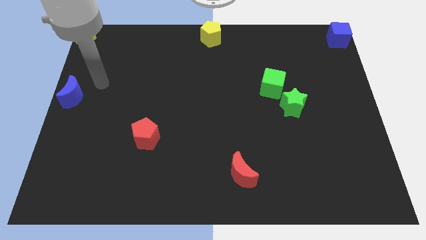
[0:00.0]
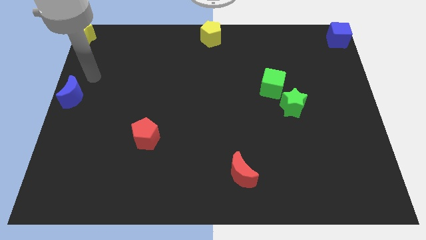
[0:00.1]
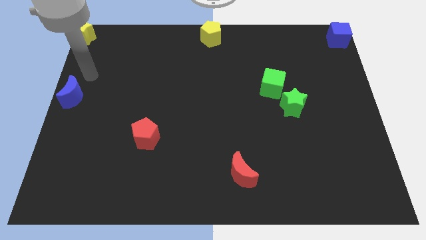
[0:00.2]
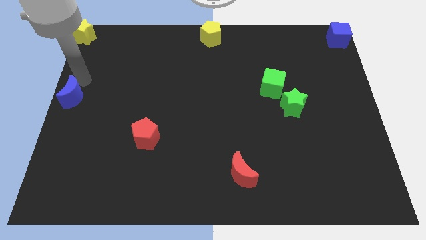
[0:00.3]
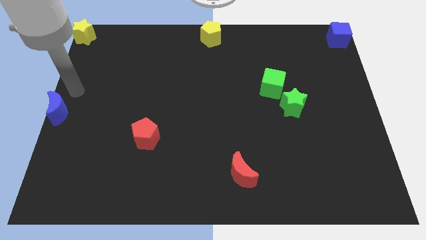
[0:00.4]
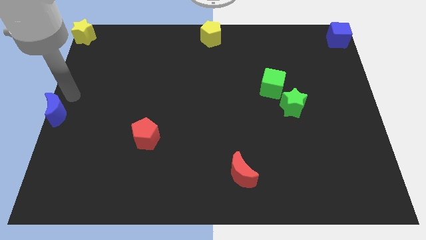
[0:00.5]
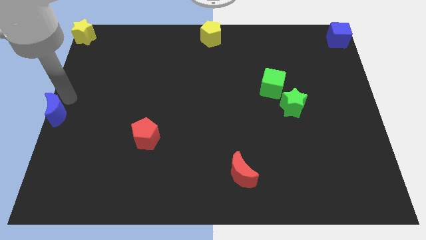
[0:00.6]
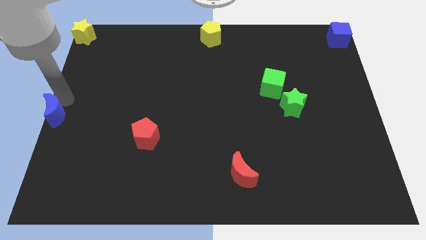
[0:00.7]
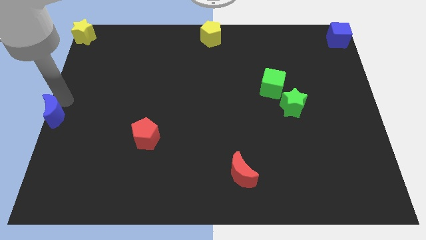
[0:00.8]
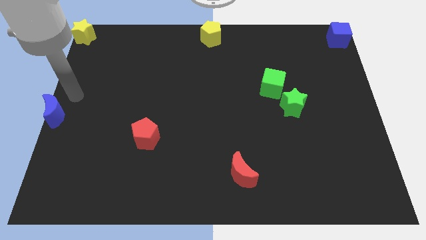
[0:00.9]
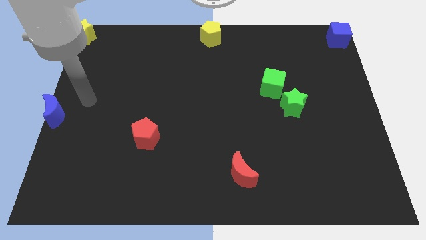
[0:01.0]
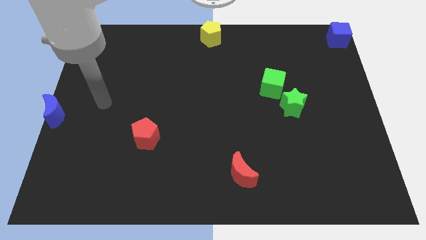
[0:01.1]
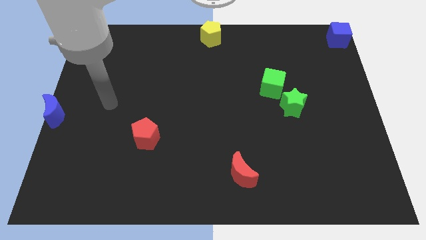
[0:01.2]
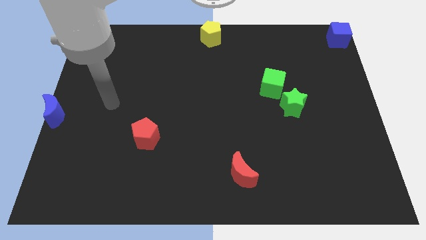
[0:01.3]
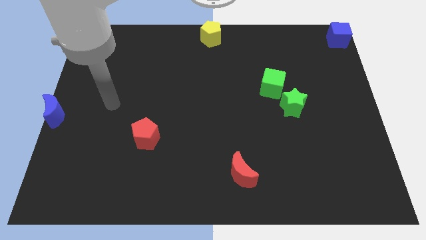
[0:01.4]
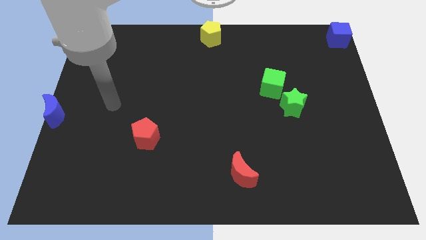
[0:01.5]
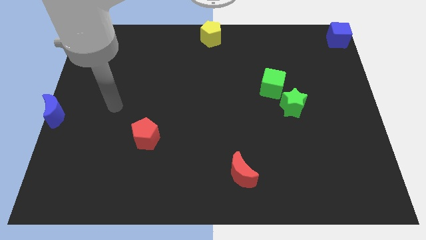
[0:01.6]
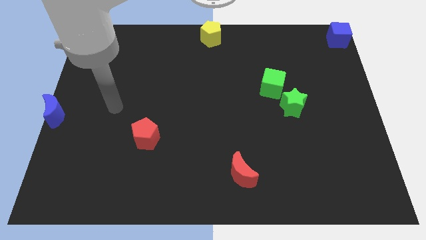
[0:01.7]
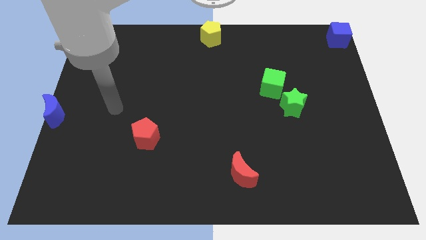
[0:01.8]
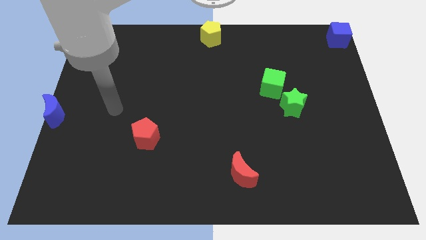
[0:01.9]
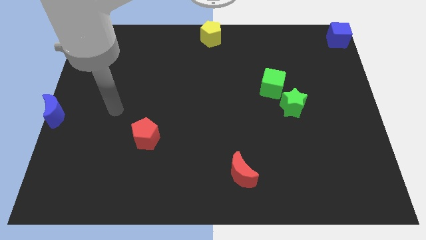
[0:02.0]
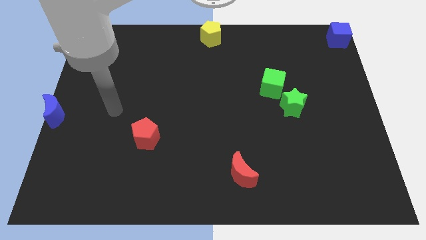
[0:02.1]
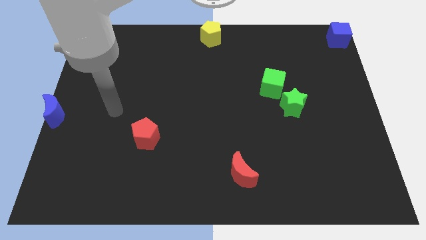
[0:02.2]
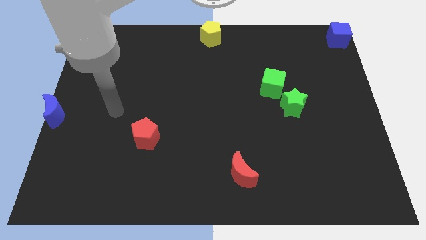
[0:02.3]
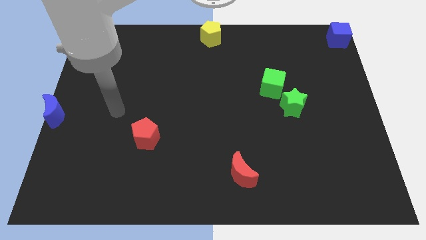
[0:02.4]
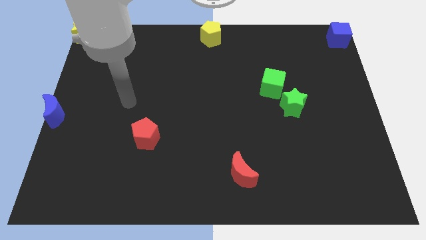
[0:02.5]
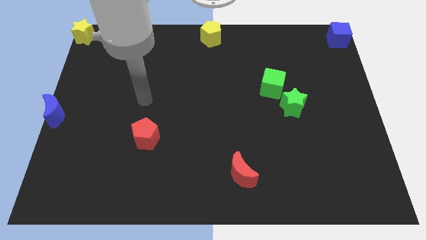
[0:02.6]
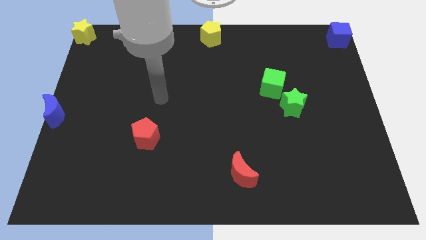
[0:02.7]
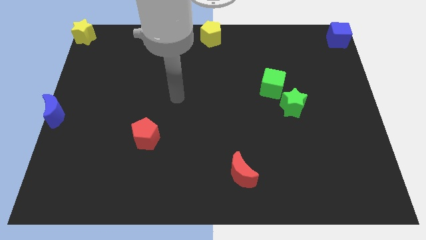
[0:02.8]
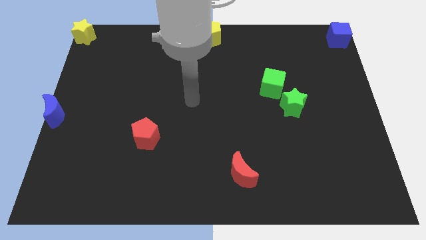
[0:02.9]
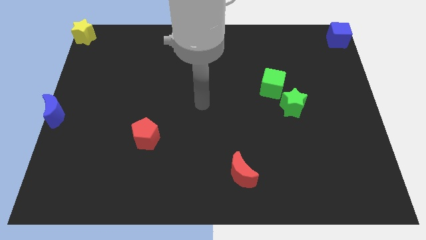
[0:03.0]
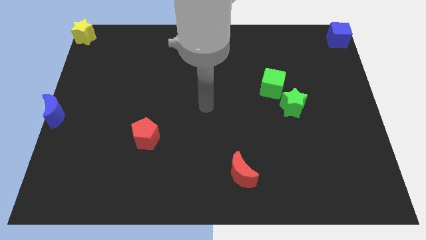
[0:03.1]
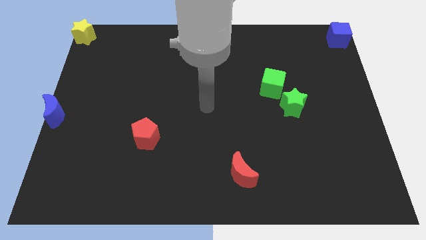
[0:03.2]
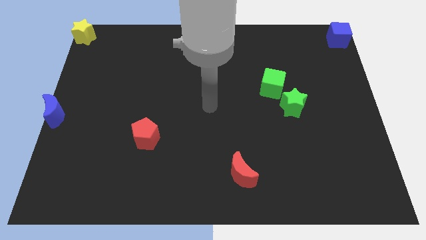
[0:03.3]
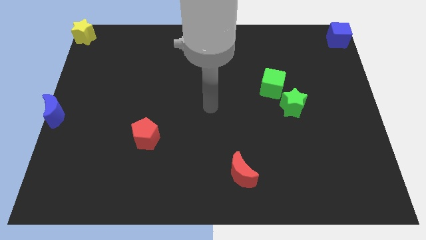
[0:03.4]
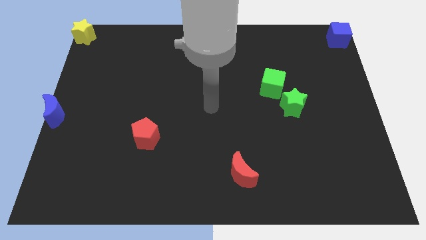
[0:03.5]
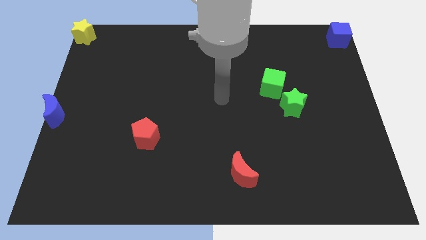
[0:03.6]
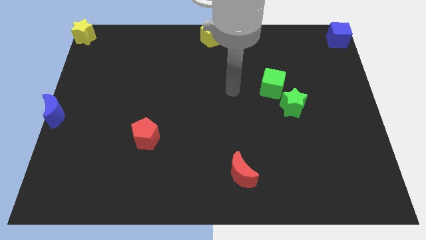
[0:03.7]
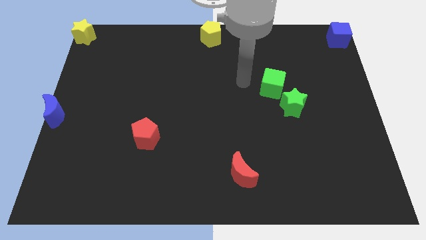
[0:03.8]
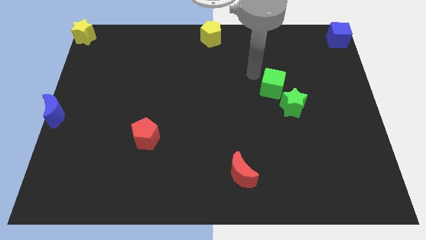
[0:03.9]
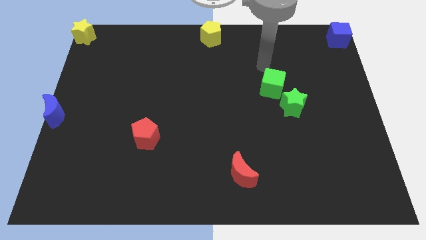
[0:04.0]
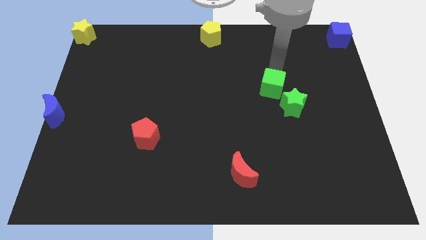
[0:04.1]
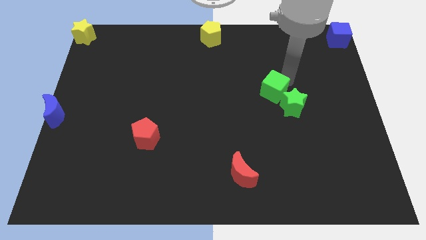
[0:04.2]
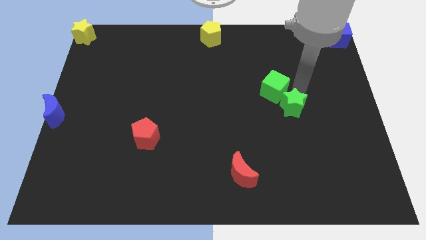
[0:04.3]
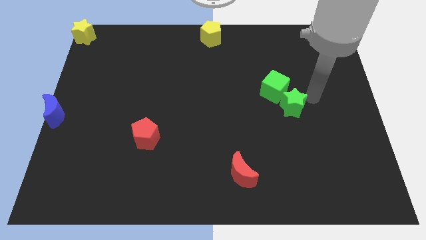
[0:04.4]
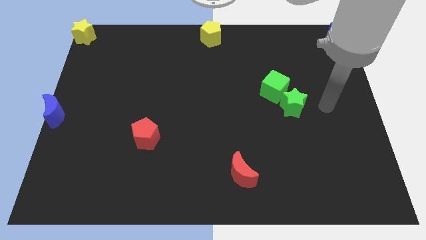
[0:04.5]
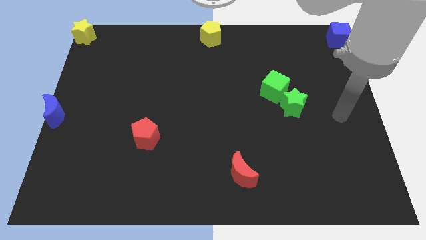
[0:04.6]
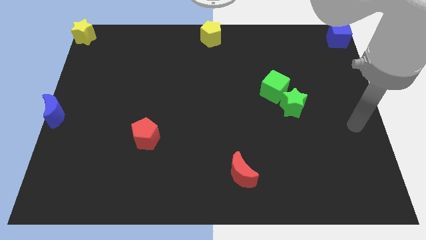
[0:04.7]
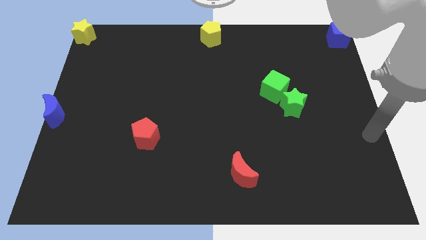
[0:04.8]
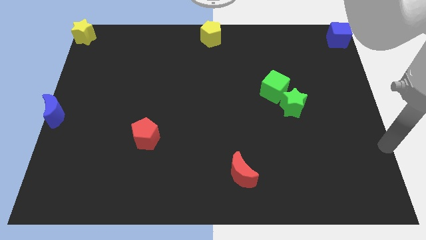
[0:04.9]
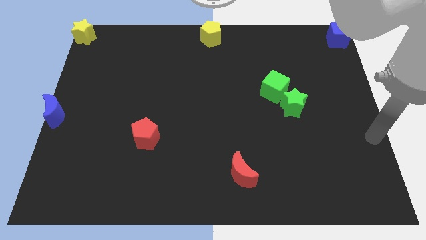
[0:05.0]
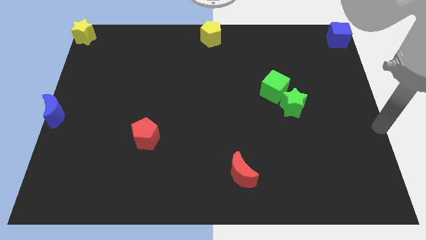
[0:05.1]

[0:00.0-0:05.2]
move your arm to the center right

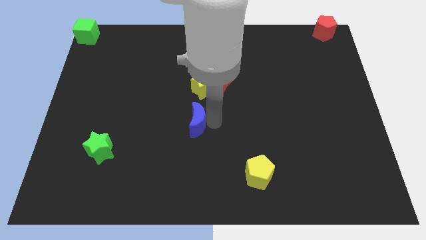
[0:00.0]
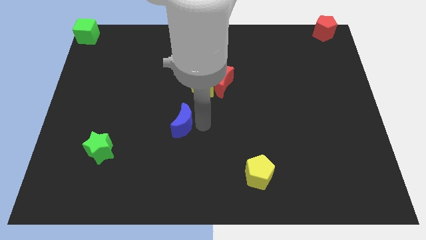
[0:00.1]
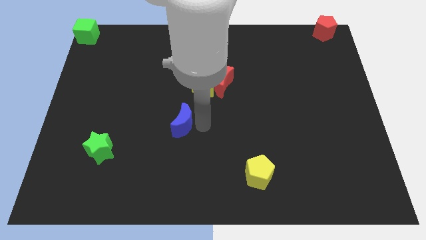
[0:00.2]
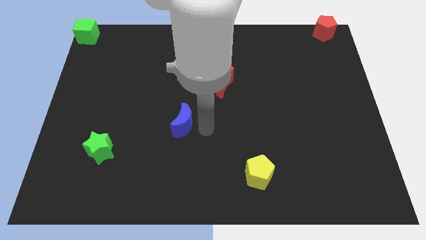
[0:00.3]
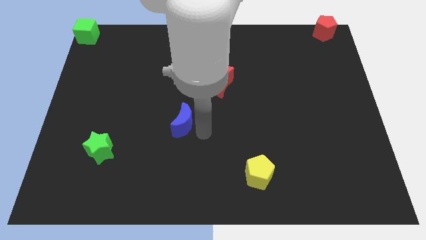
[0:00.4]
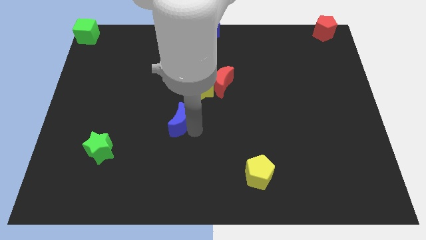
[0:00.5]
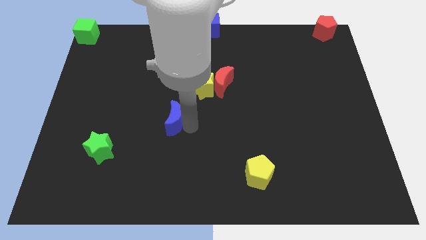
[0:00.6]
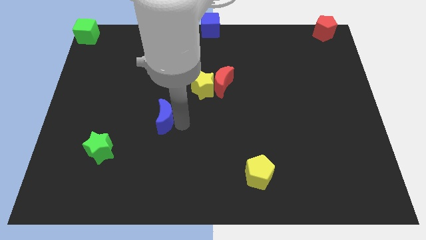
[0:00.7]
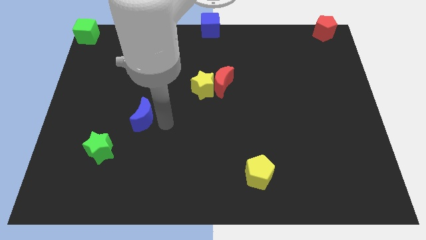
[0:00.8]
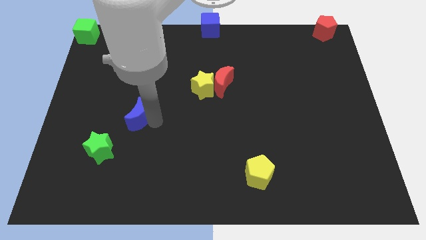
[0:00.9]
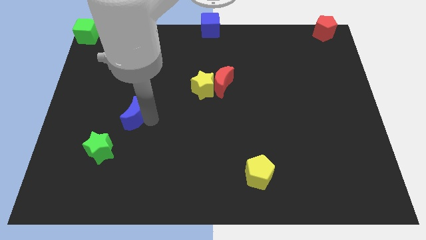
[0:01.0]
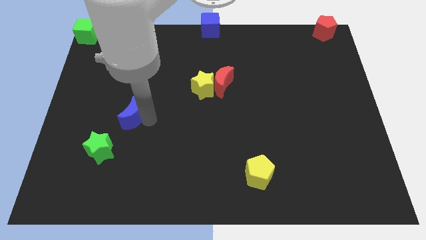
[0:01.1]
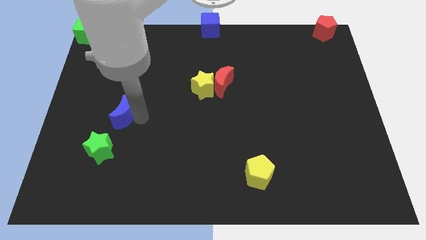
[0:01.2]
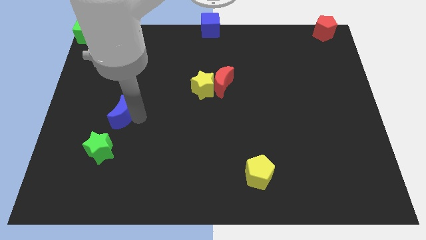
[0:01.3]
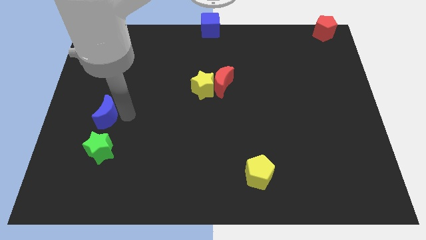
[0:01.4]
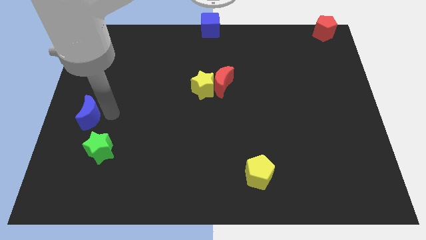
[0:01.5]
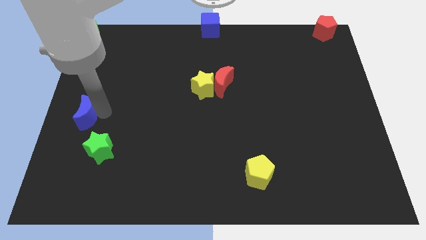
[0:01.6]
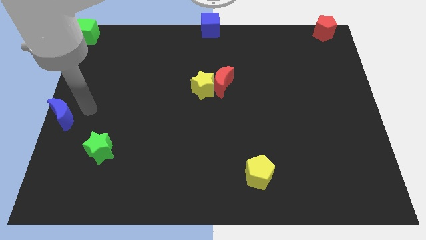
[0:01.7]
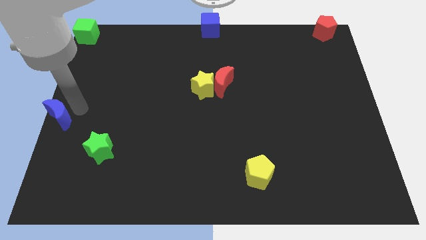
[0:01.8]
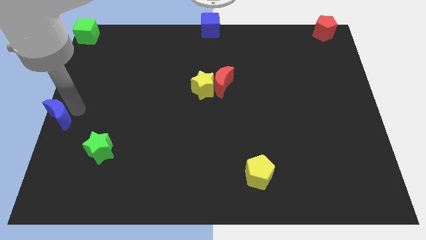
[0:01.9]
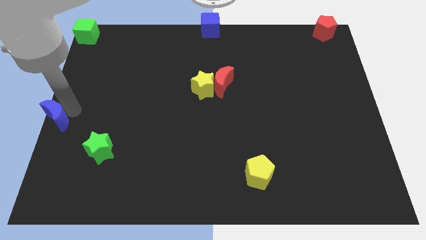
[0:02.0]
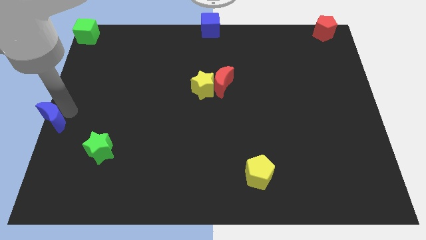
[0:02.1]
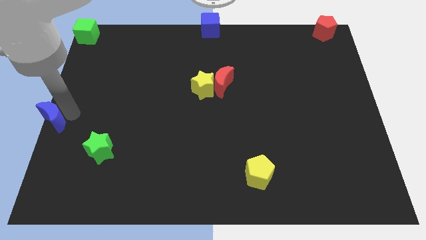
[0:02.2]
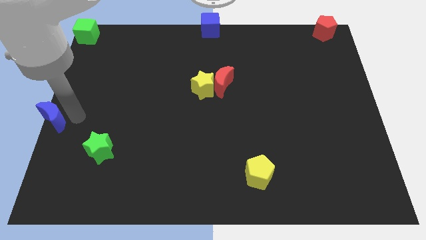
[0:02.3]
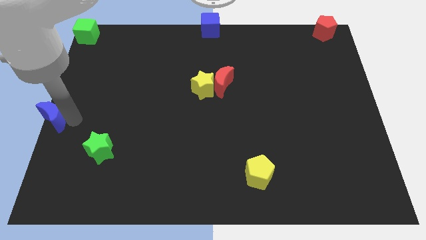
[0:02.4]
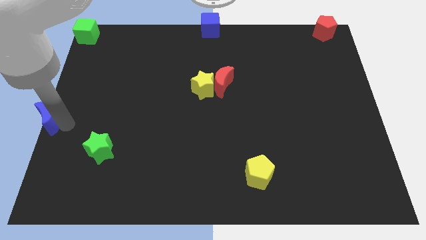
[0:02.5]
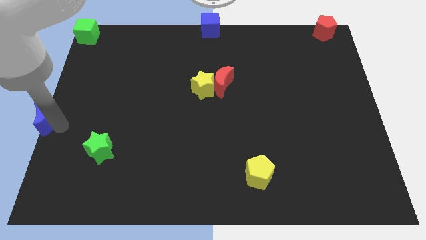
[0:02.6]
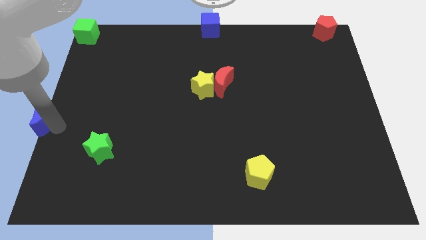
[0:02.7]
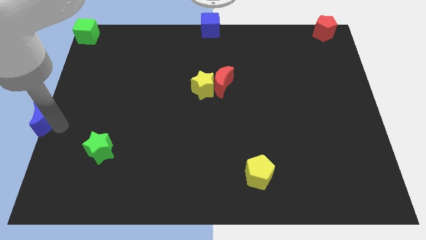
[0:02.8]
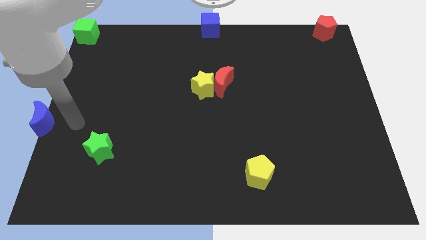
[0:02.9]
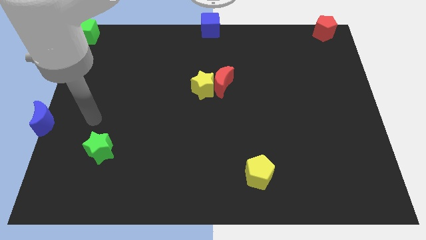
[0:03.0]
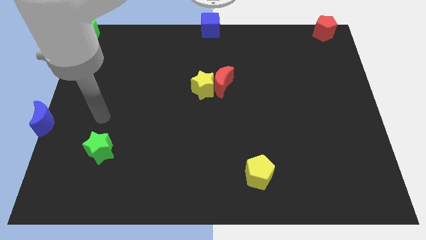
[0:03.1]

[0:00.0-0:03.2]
move the blue crescent to the left center of the board

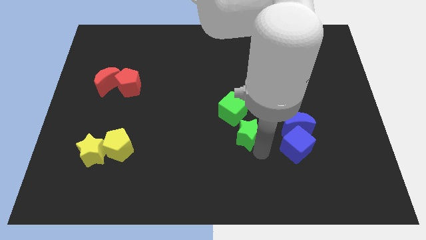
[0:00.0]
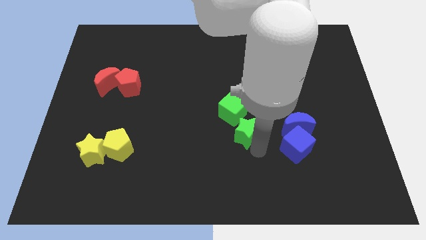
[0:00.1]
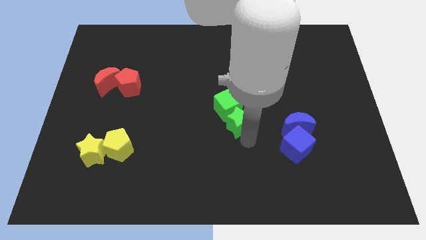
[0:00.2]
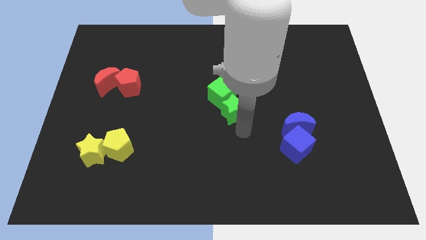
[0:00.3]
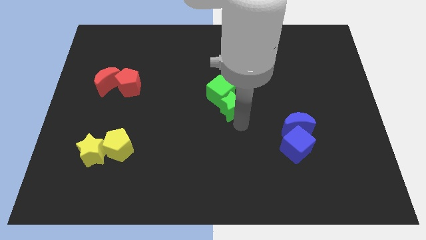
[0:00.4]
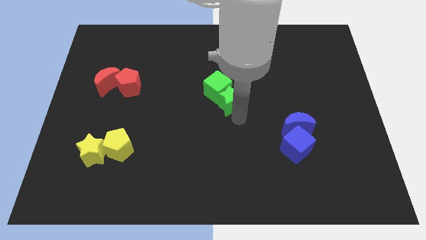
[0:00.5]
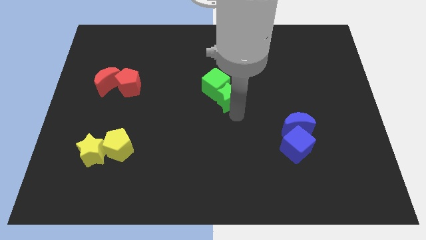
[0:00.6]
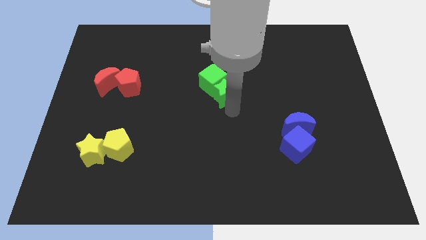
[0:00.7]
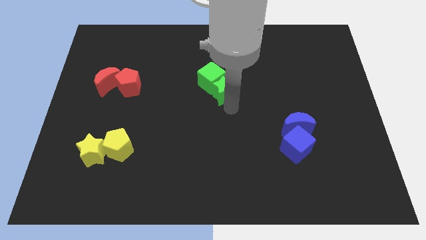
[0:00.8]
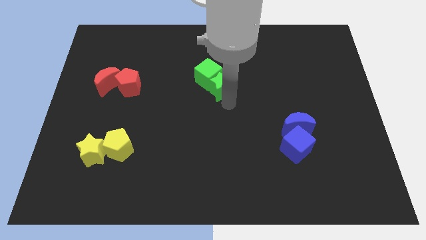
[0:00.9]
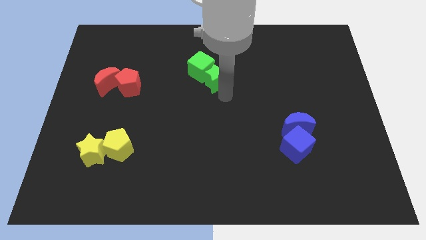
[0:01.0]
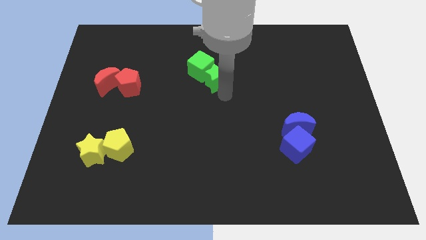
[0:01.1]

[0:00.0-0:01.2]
push the green blocks to the right of the red blocks
